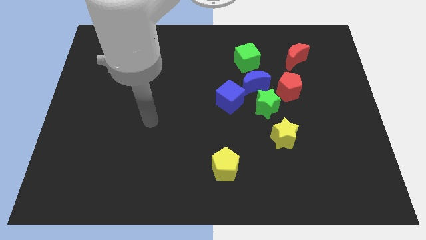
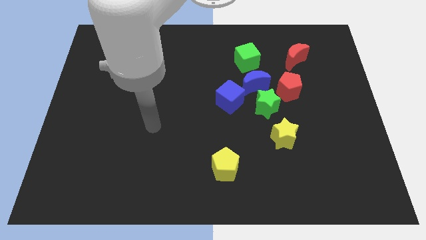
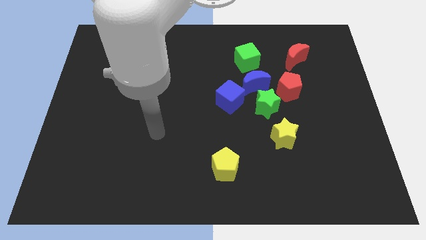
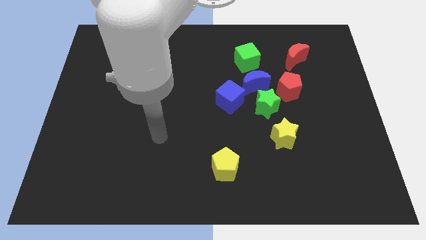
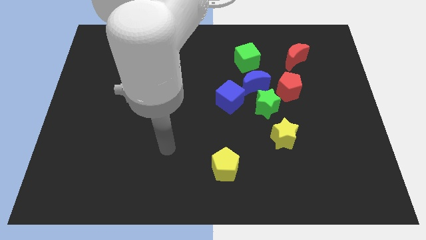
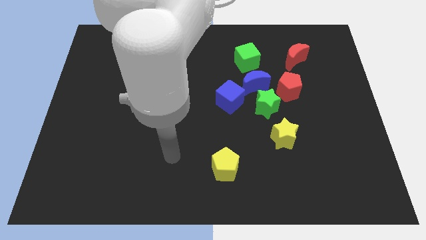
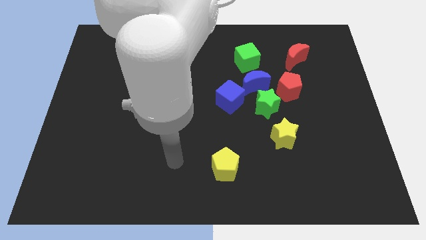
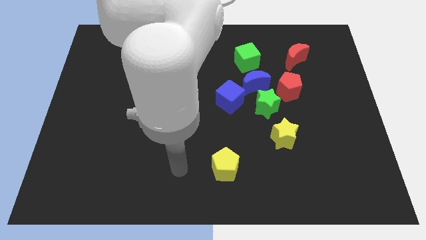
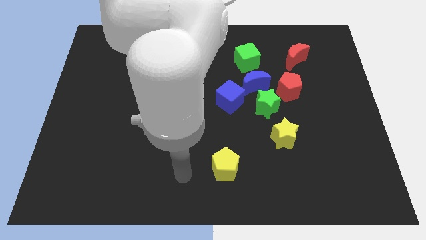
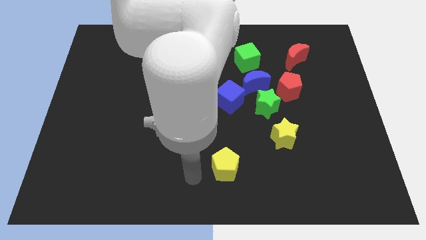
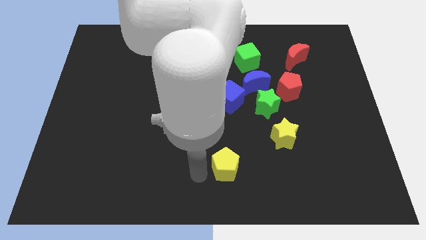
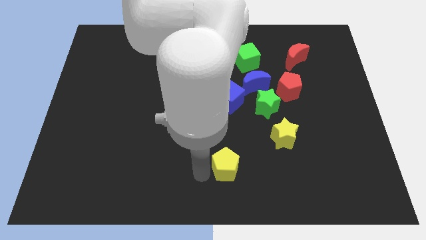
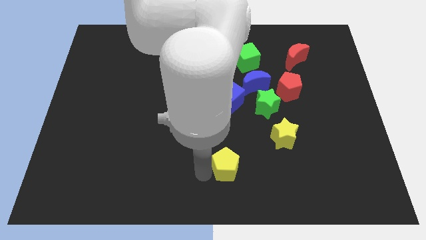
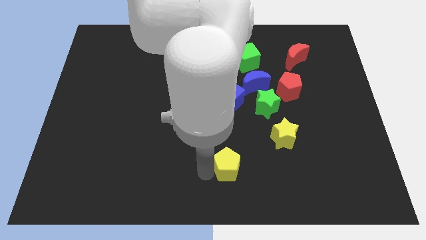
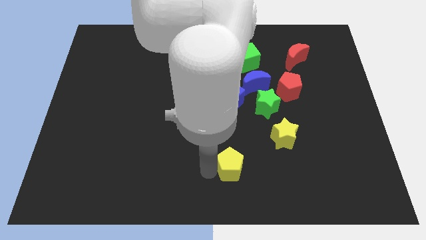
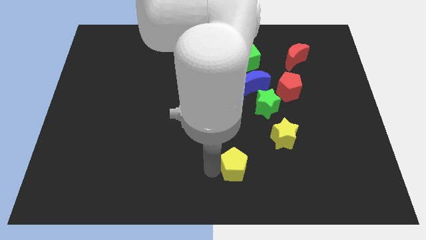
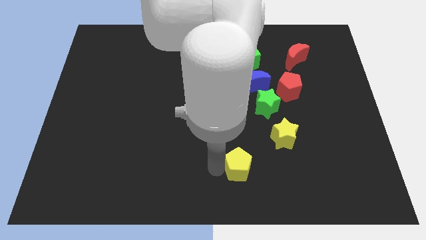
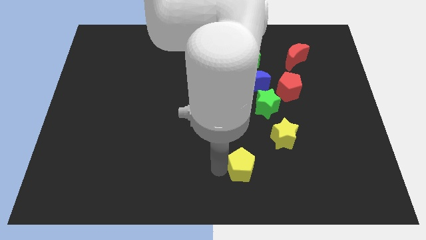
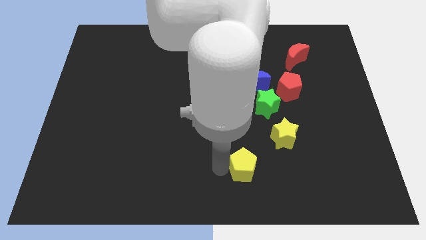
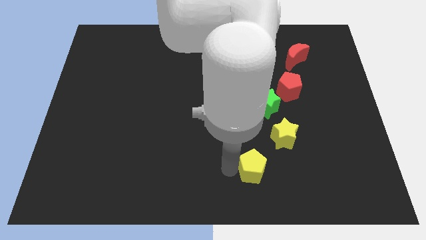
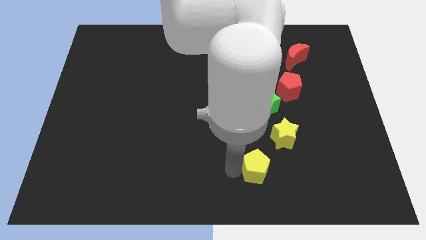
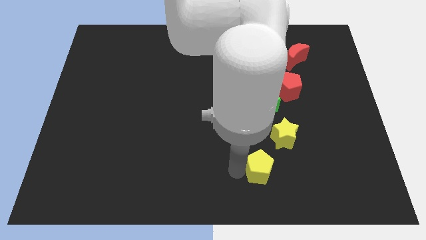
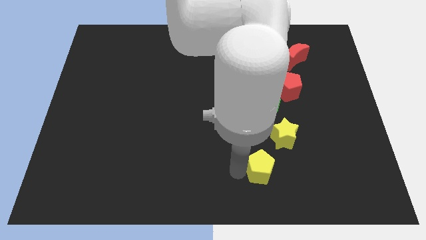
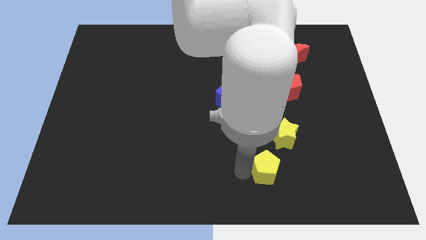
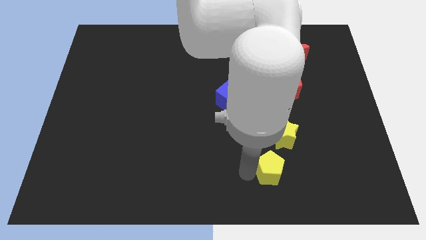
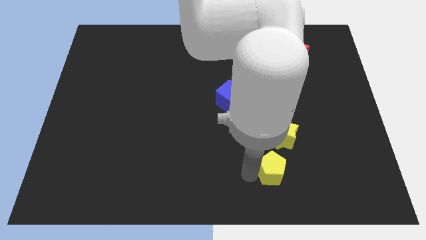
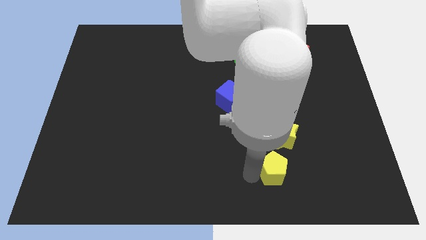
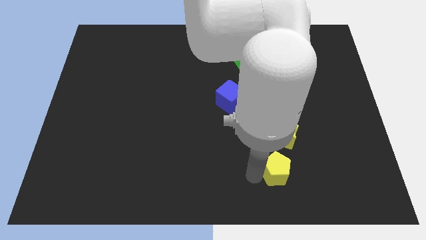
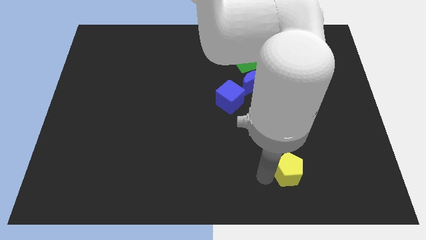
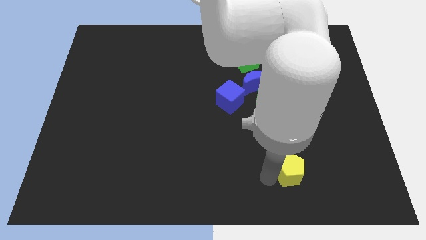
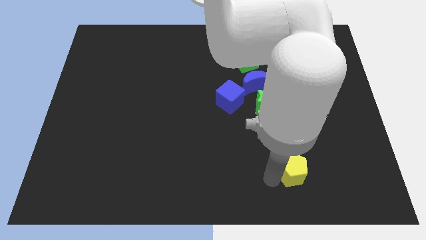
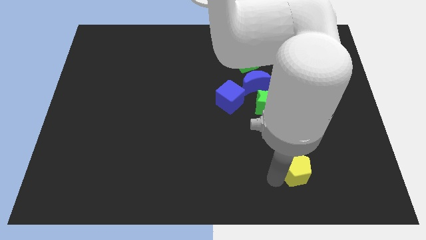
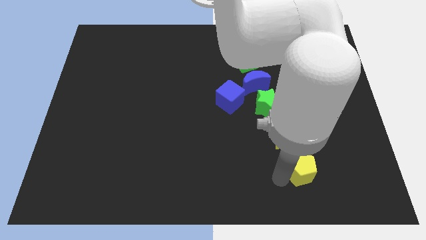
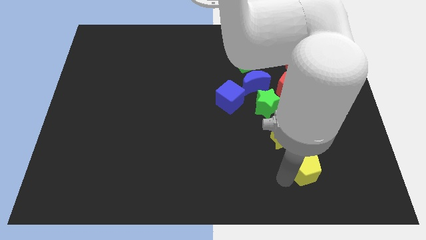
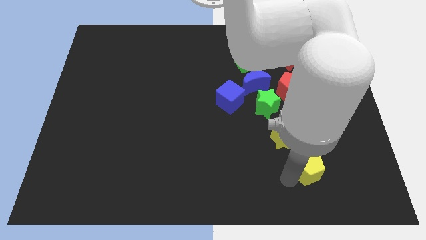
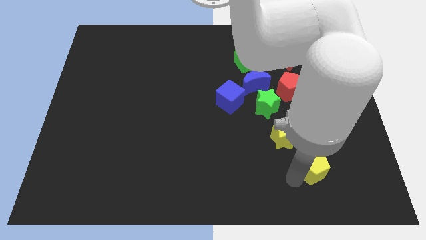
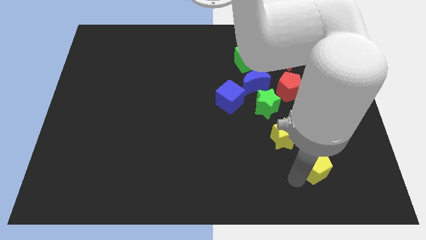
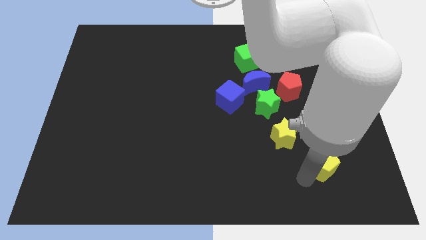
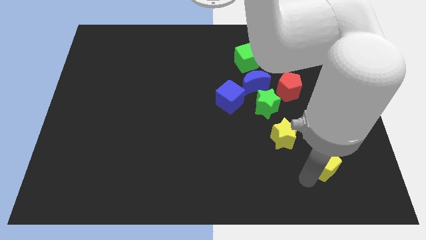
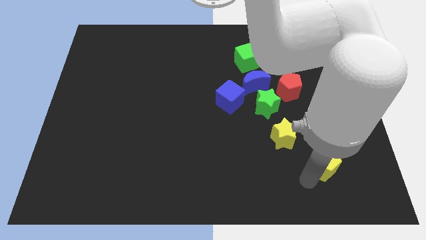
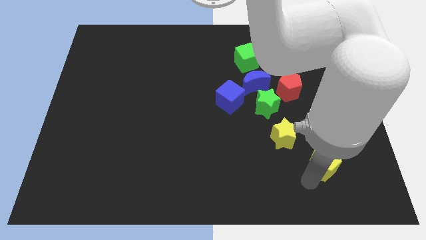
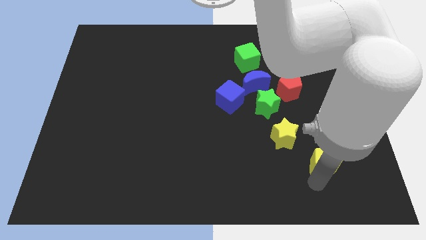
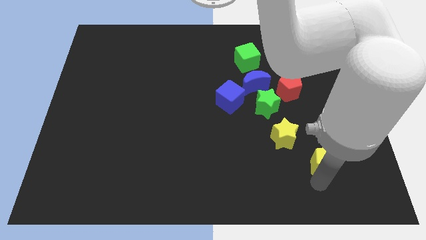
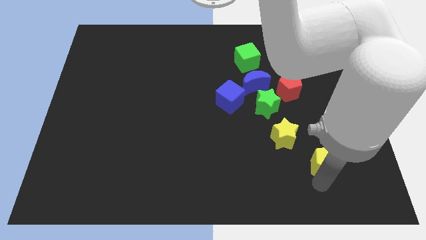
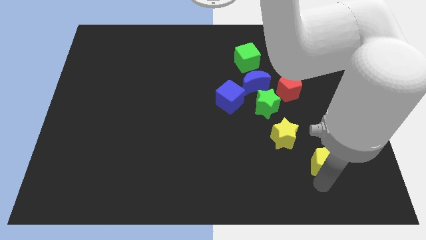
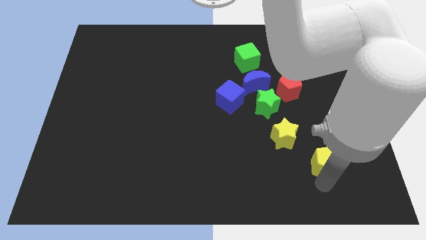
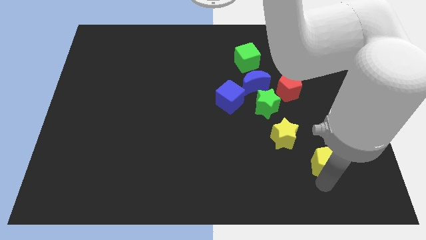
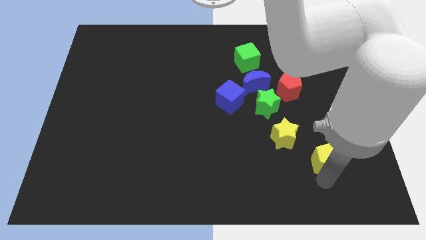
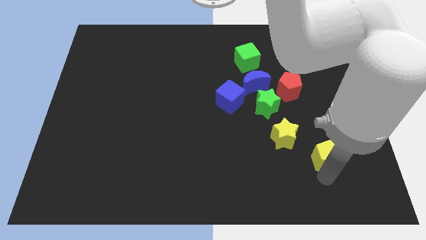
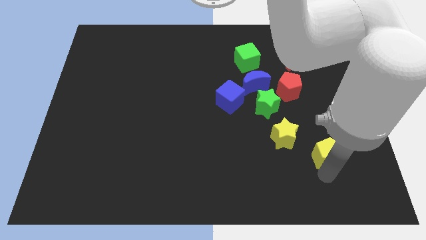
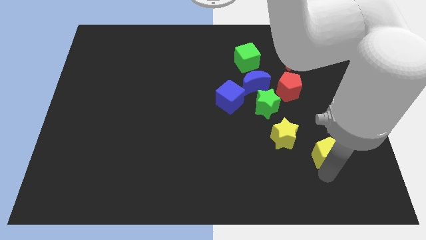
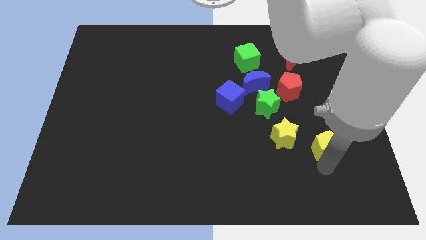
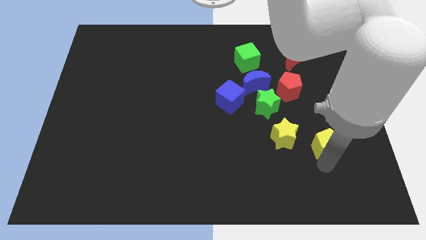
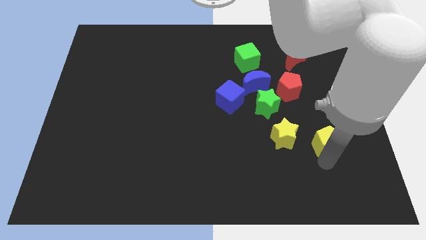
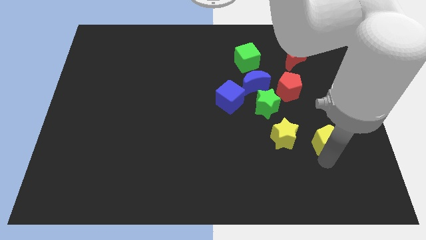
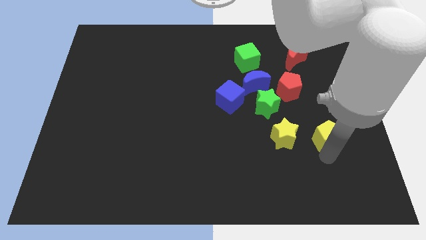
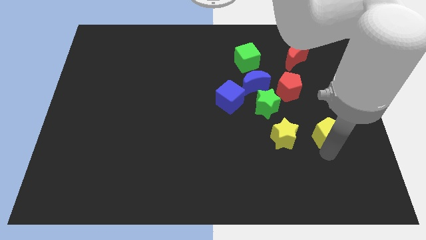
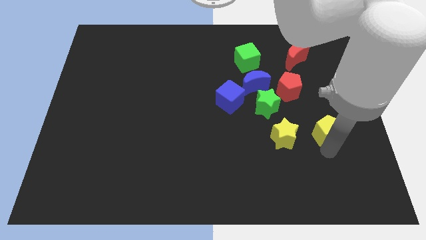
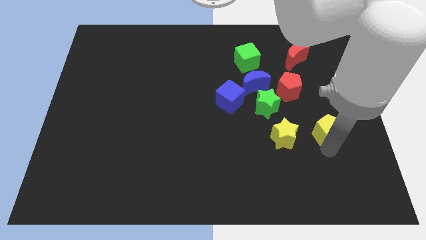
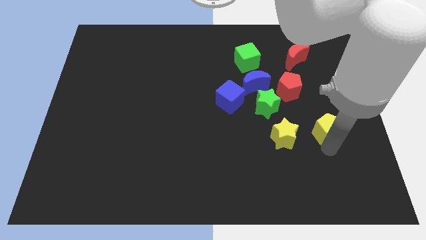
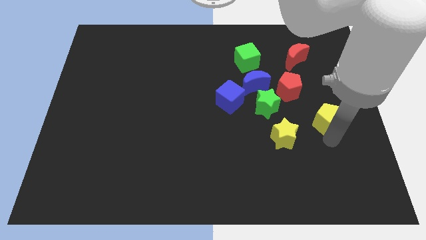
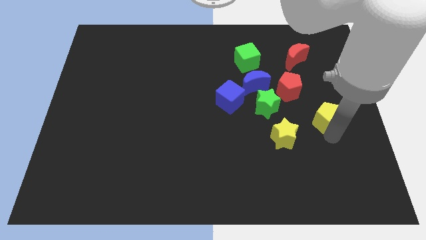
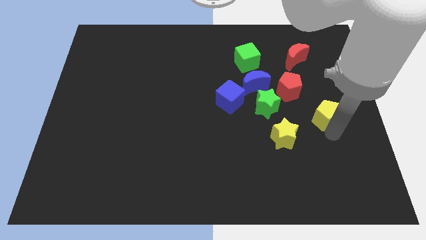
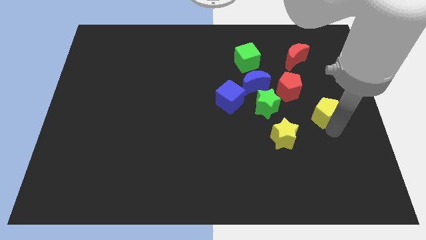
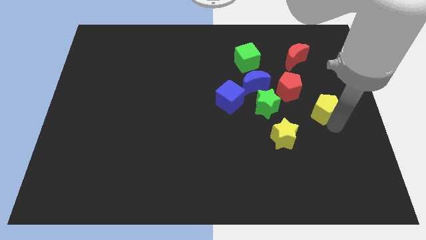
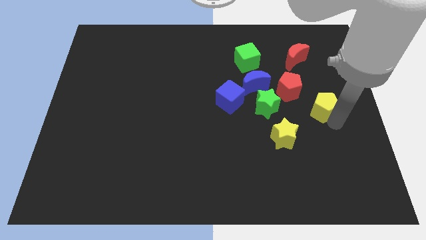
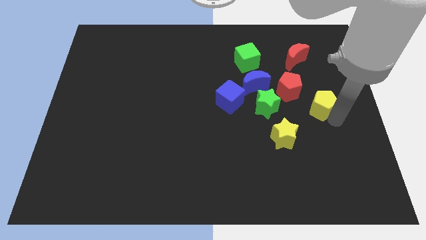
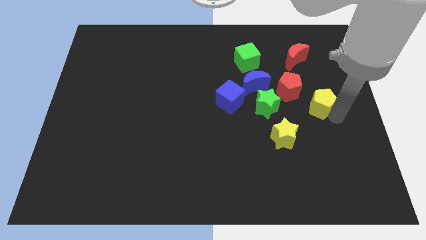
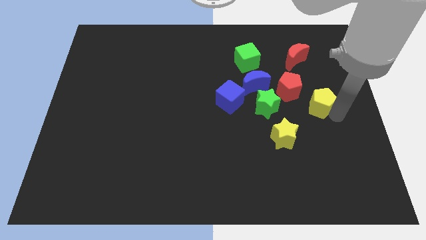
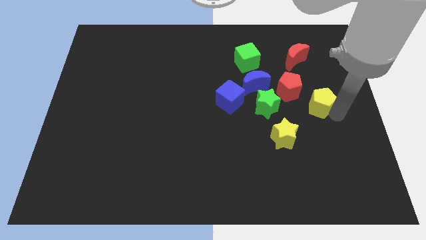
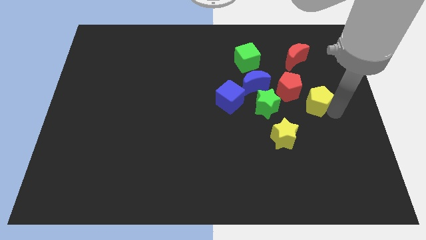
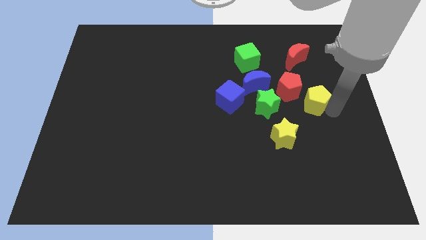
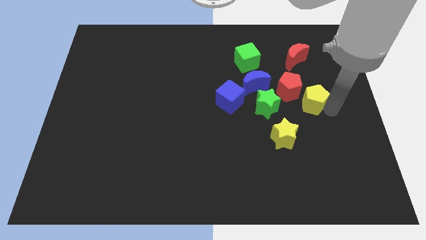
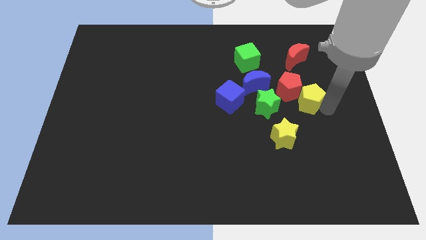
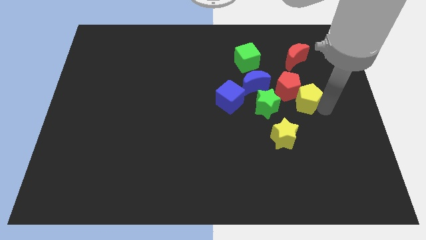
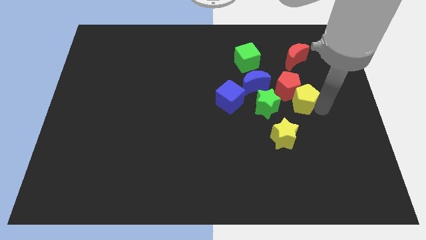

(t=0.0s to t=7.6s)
put the yellow pentagon towards the red pentagon

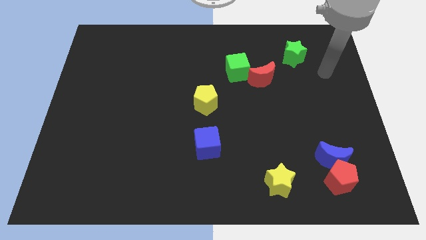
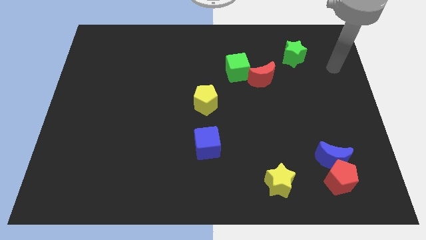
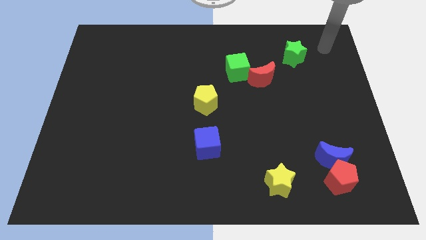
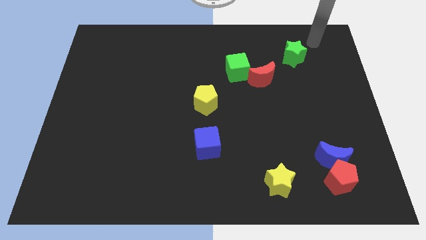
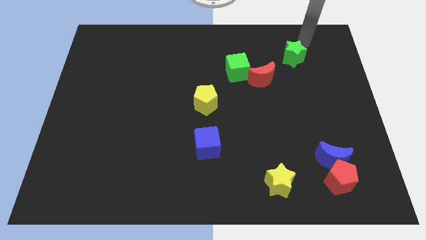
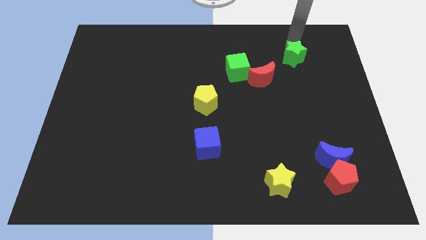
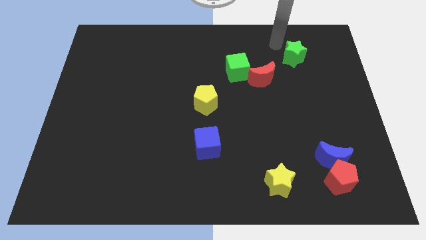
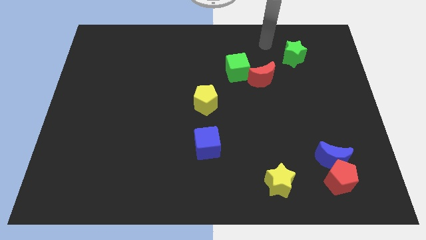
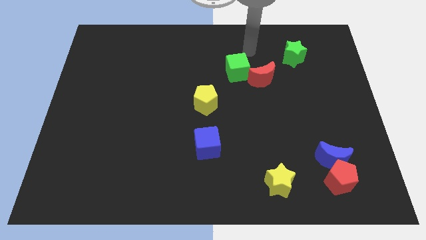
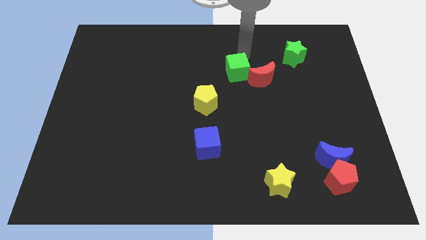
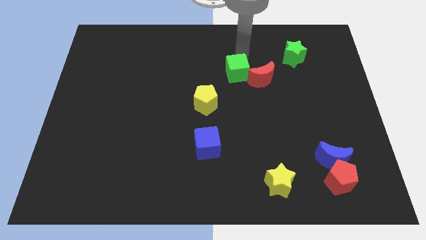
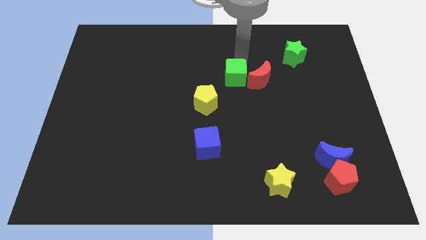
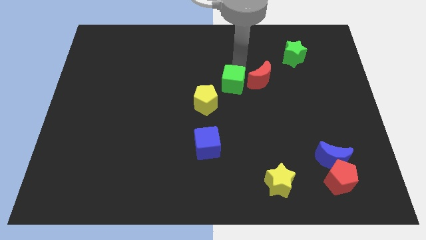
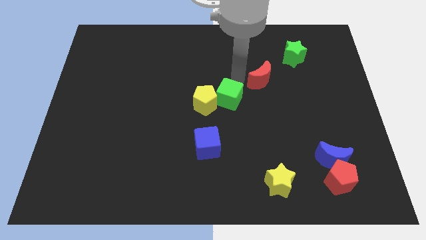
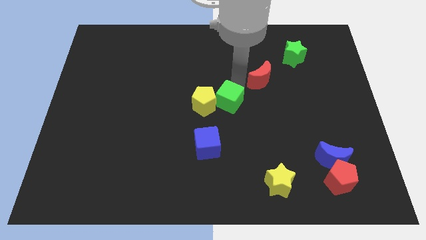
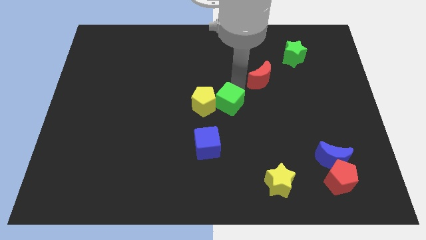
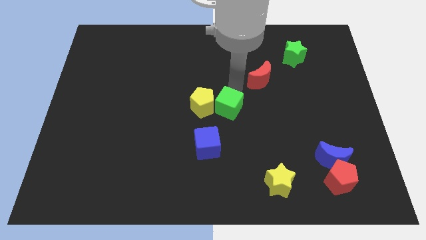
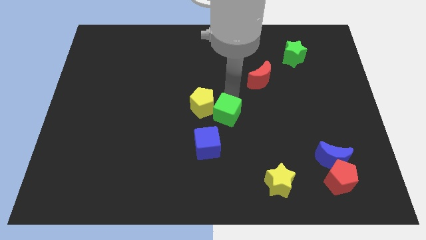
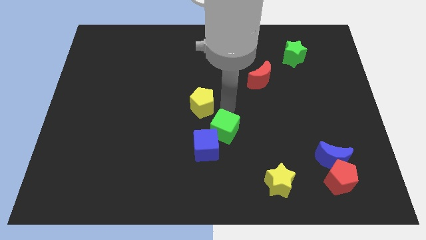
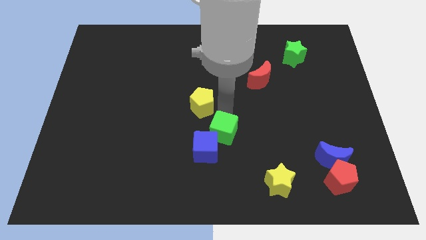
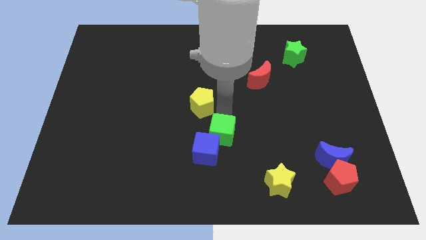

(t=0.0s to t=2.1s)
move the green cube next to the blue cube
